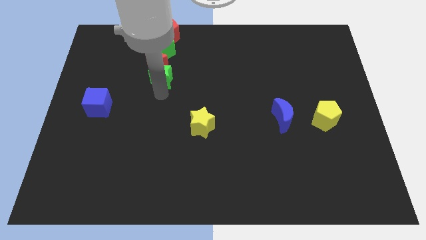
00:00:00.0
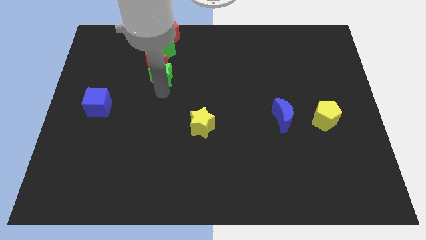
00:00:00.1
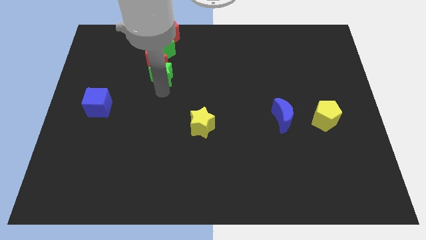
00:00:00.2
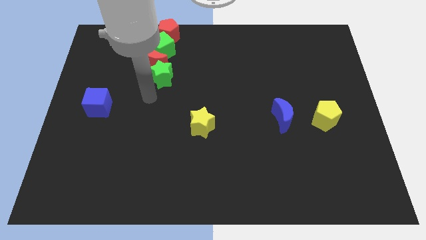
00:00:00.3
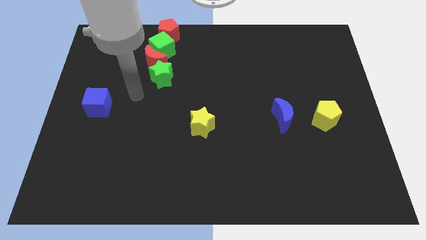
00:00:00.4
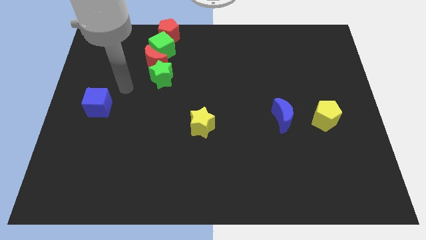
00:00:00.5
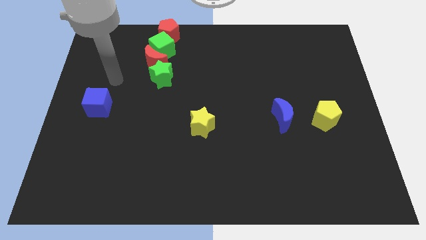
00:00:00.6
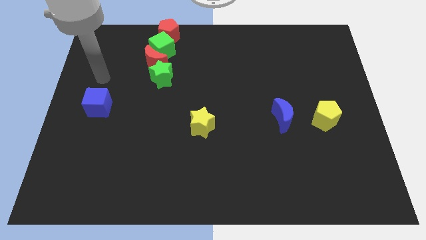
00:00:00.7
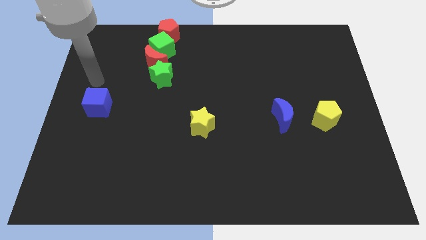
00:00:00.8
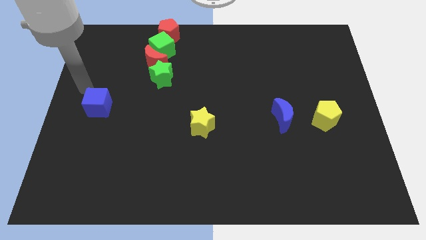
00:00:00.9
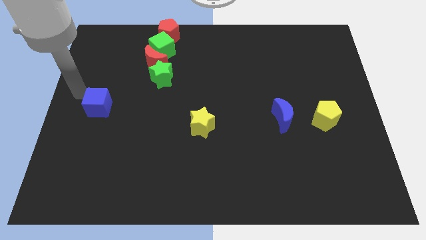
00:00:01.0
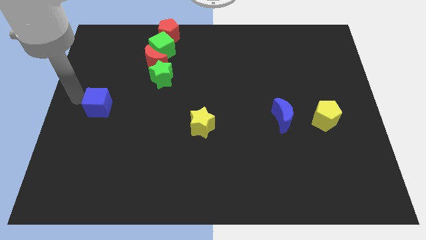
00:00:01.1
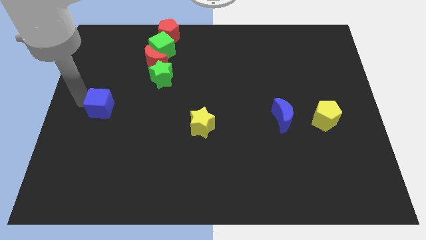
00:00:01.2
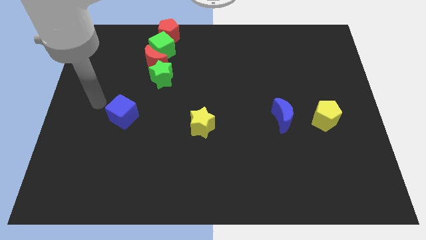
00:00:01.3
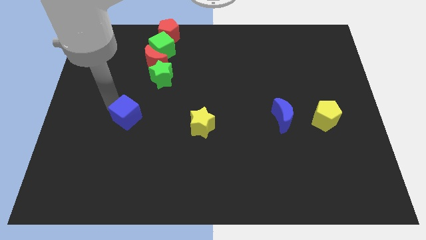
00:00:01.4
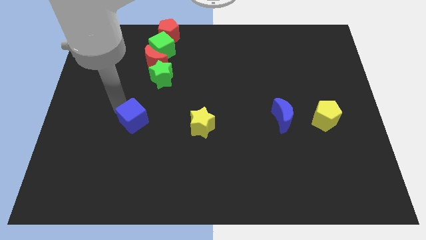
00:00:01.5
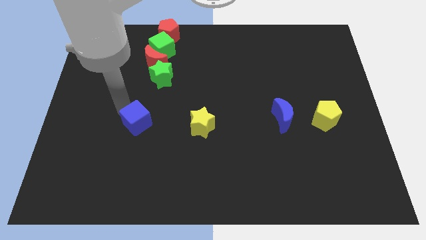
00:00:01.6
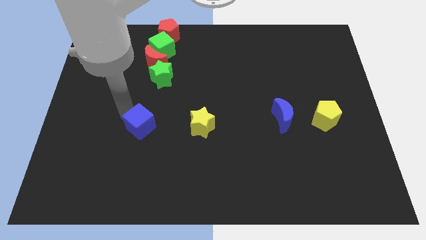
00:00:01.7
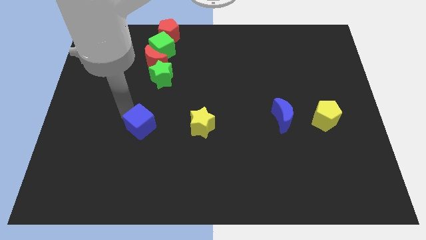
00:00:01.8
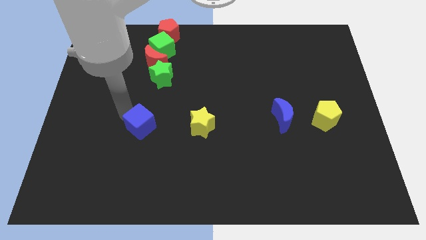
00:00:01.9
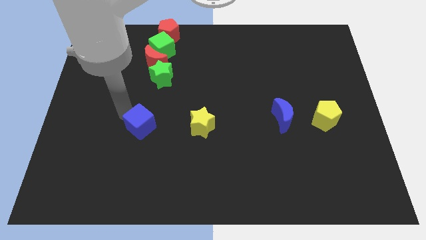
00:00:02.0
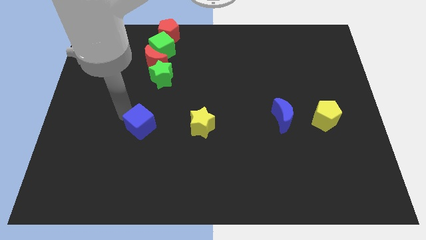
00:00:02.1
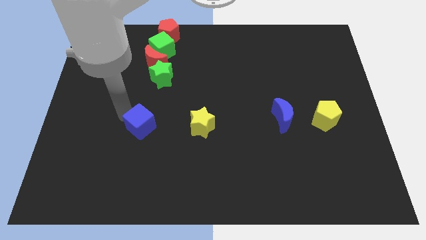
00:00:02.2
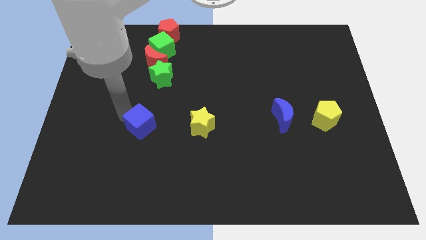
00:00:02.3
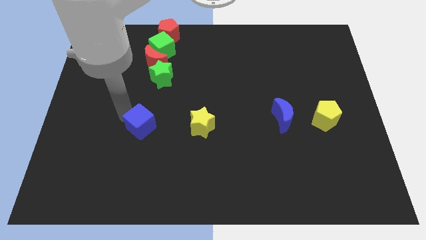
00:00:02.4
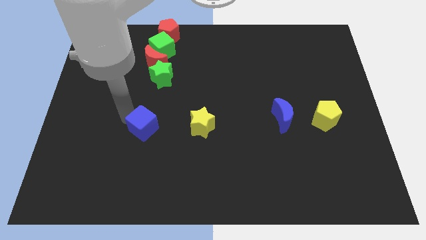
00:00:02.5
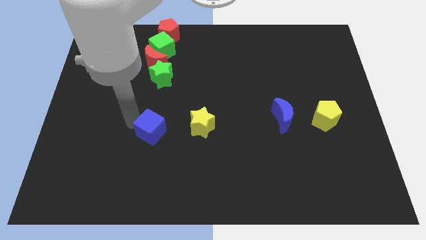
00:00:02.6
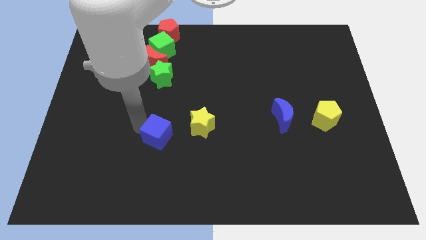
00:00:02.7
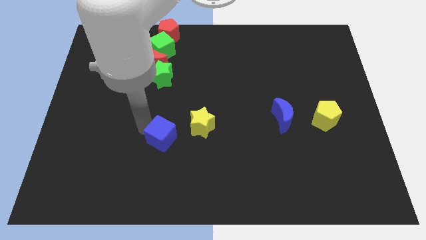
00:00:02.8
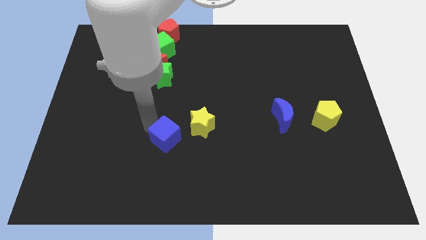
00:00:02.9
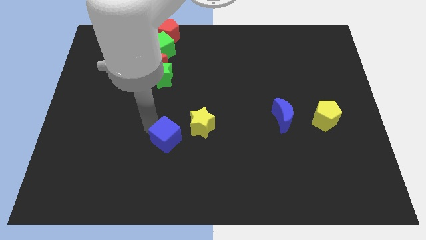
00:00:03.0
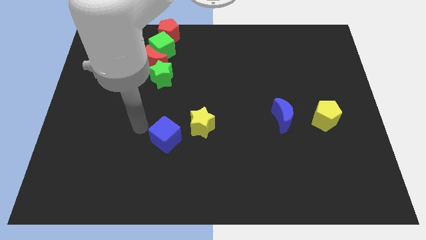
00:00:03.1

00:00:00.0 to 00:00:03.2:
place blue cube vertically below the green star

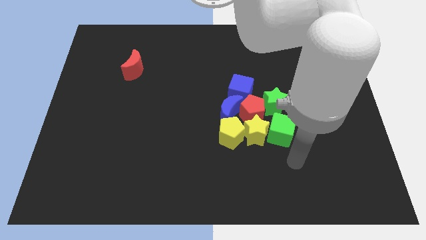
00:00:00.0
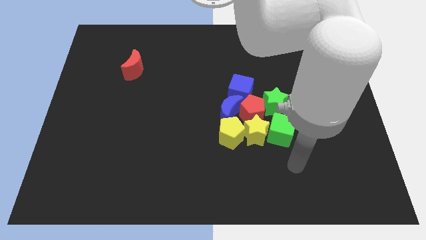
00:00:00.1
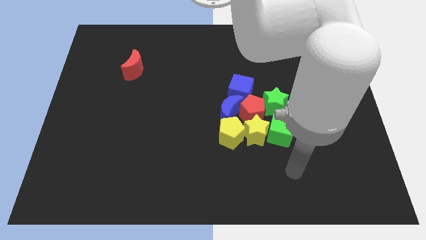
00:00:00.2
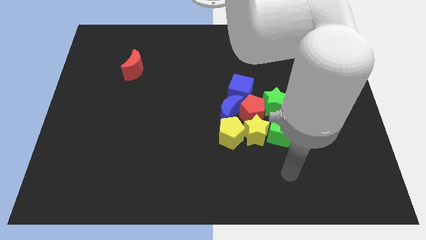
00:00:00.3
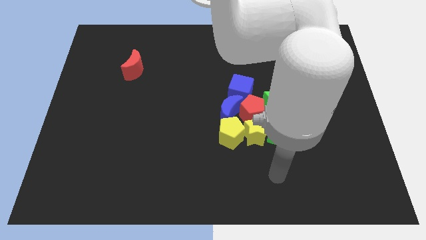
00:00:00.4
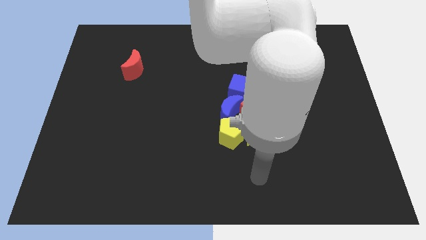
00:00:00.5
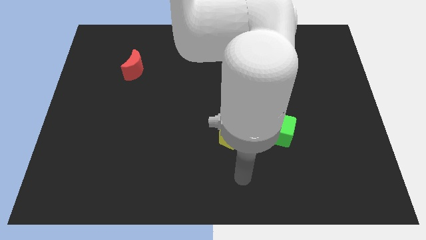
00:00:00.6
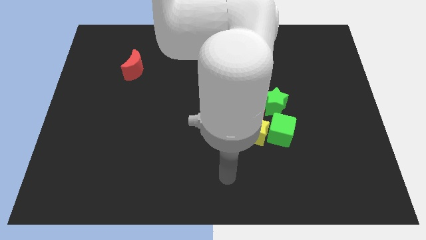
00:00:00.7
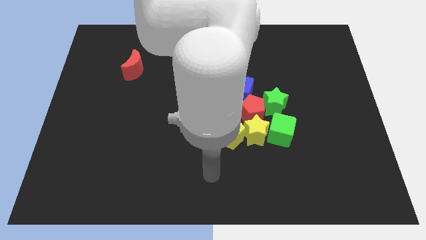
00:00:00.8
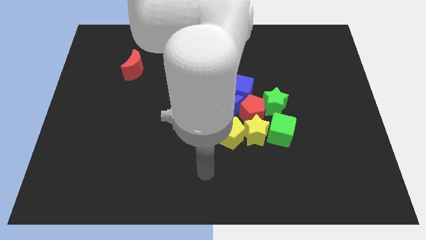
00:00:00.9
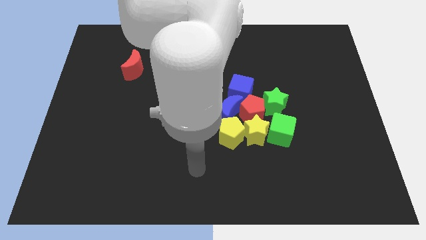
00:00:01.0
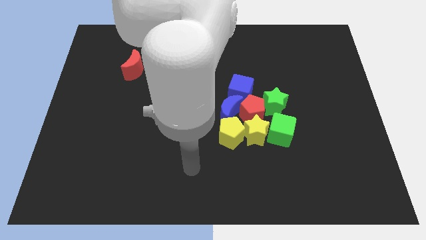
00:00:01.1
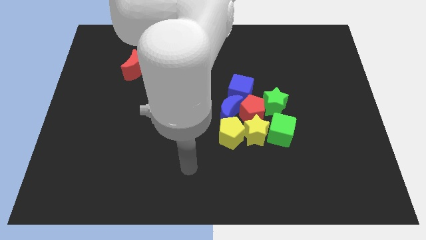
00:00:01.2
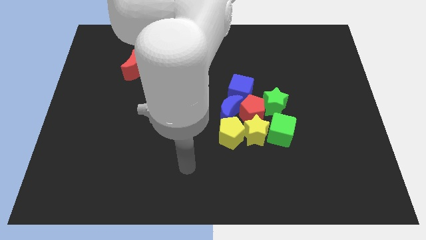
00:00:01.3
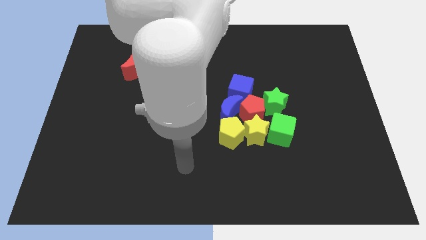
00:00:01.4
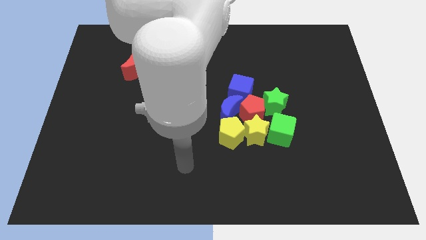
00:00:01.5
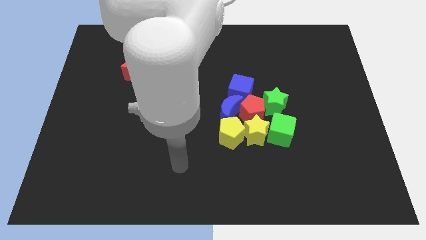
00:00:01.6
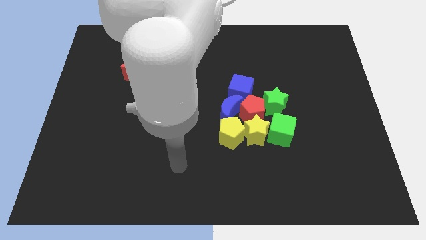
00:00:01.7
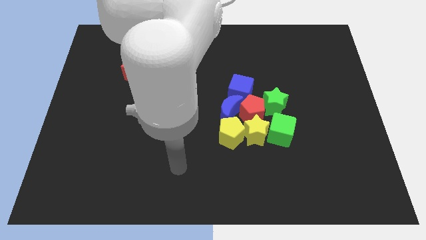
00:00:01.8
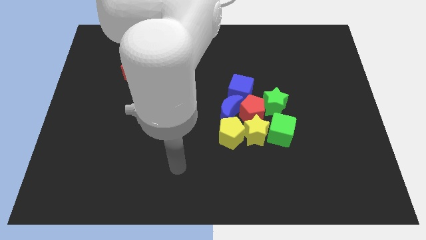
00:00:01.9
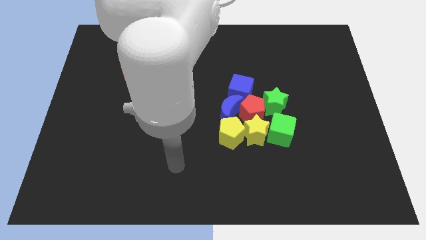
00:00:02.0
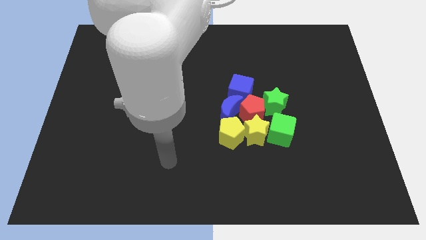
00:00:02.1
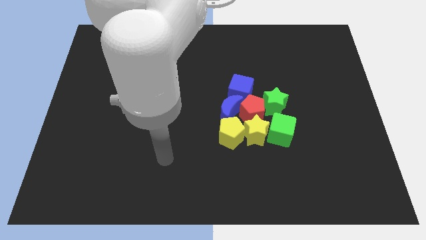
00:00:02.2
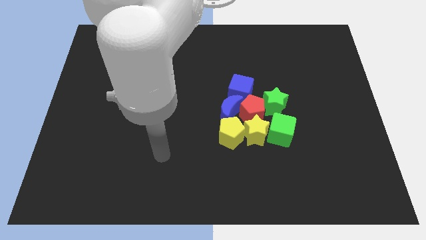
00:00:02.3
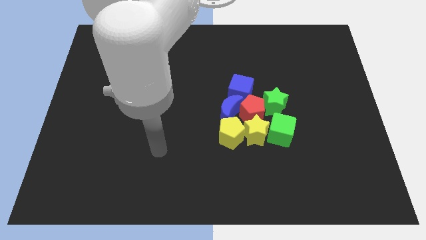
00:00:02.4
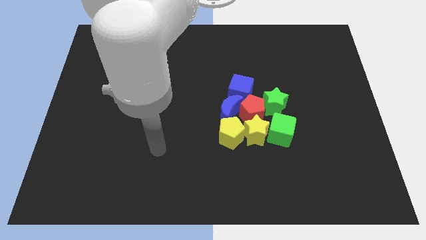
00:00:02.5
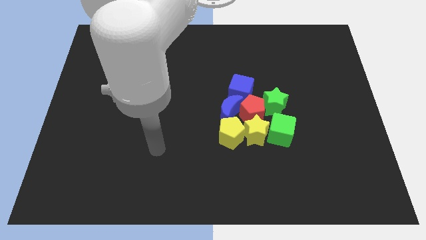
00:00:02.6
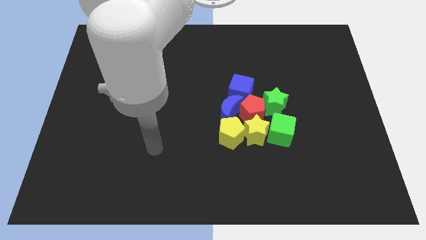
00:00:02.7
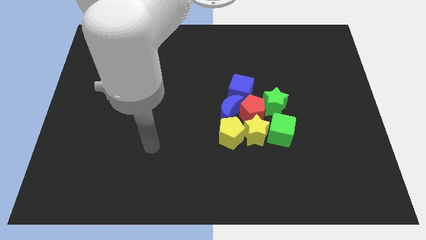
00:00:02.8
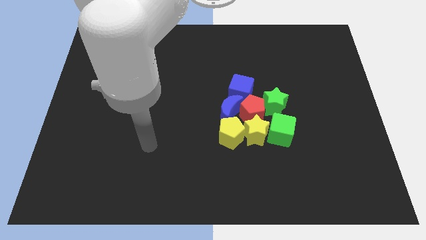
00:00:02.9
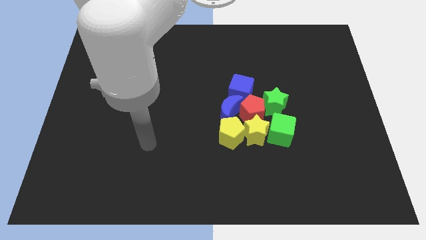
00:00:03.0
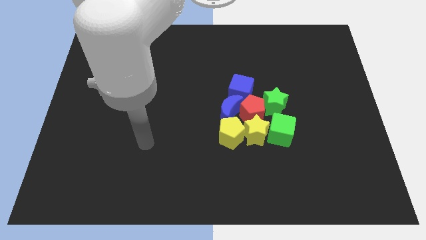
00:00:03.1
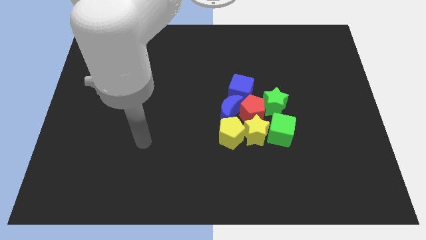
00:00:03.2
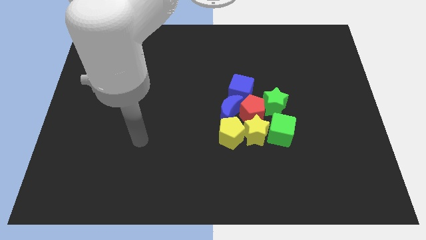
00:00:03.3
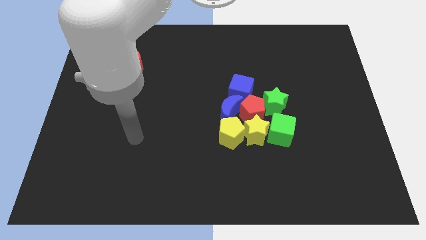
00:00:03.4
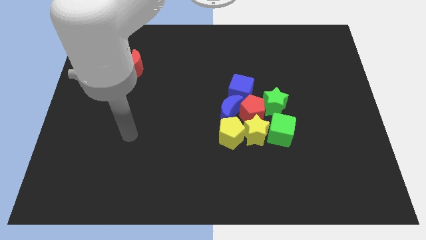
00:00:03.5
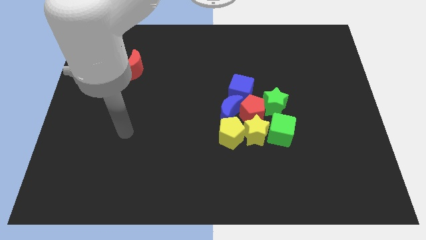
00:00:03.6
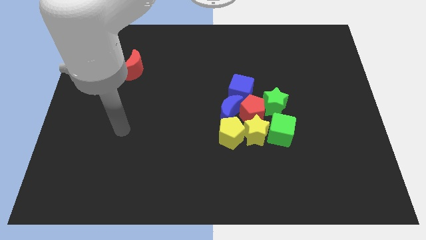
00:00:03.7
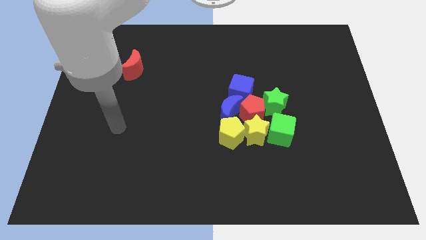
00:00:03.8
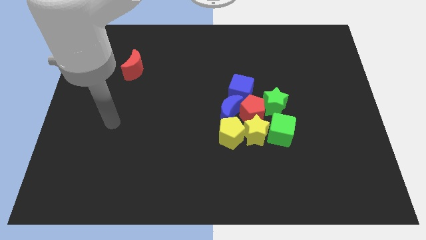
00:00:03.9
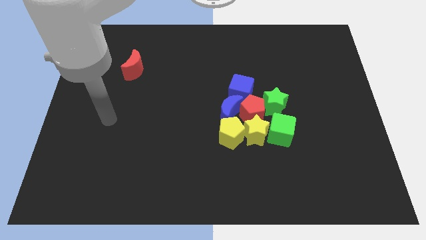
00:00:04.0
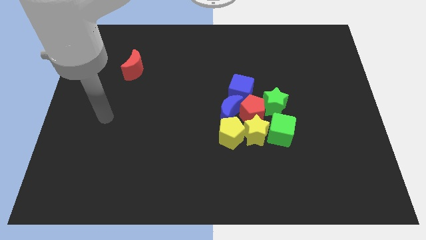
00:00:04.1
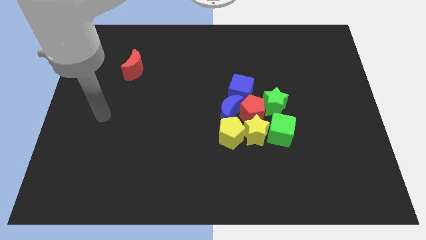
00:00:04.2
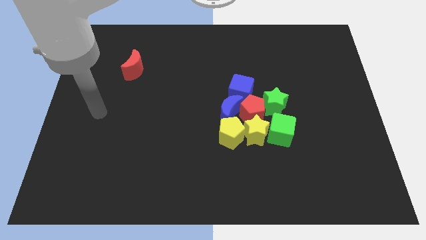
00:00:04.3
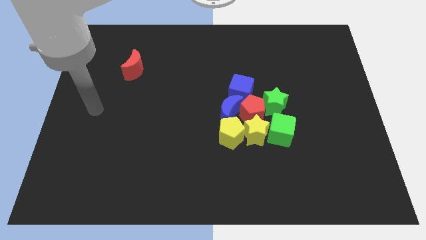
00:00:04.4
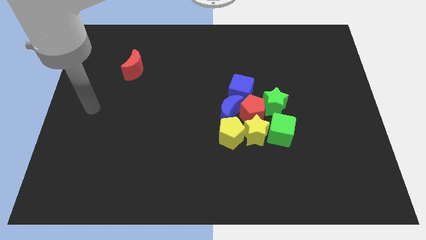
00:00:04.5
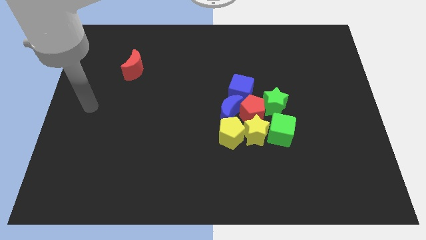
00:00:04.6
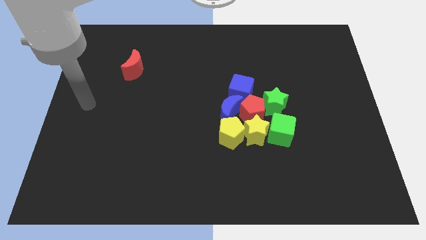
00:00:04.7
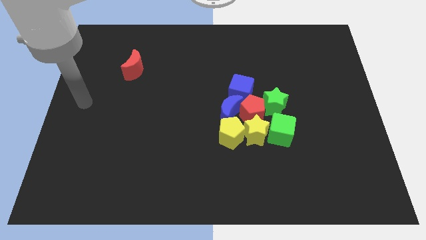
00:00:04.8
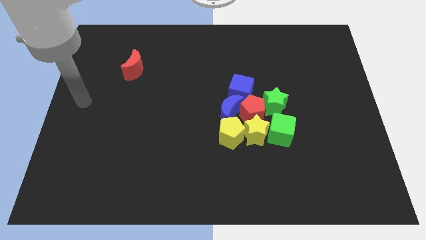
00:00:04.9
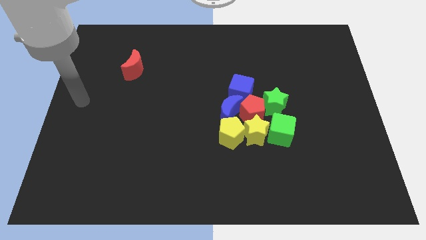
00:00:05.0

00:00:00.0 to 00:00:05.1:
move your arm away from green cube

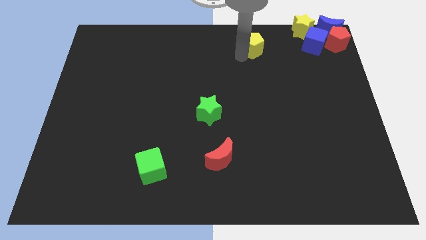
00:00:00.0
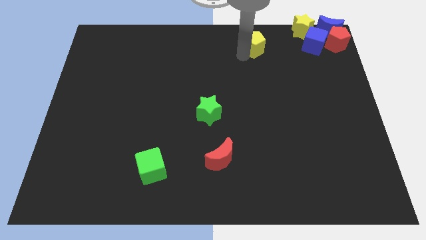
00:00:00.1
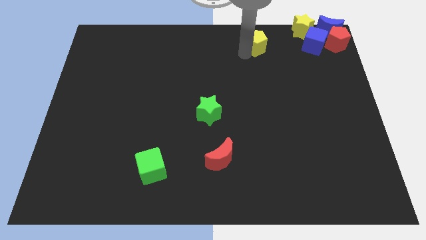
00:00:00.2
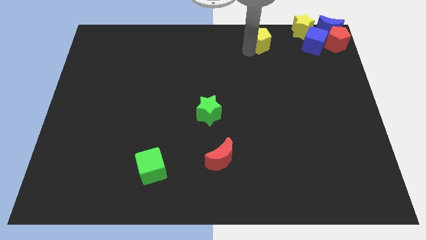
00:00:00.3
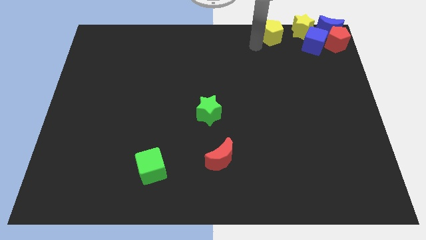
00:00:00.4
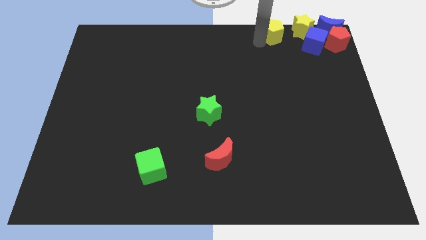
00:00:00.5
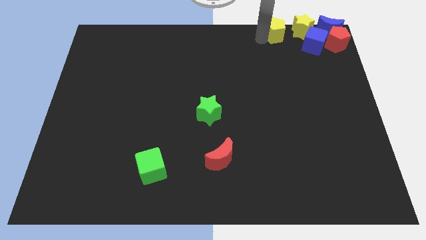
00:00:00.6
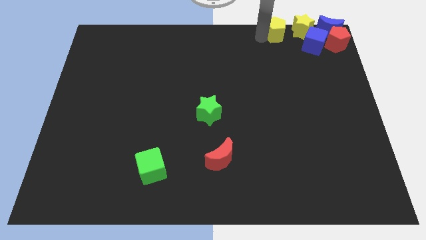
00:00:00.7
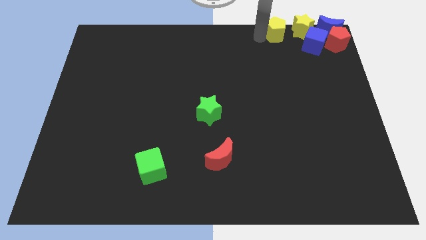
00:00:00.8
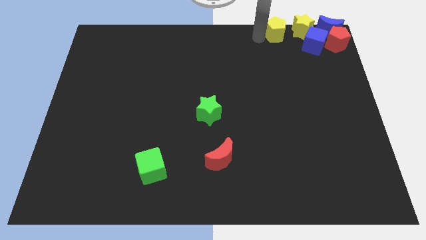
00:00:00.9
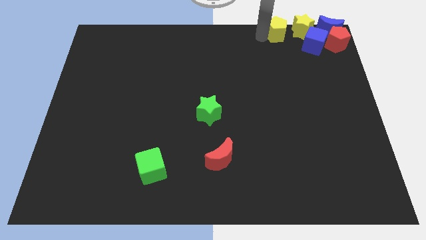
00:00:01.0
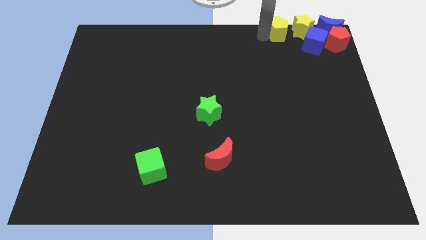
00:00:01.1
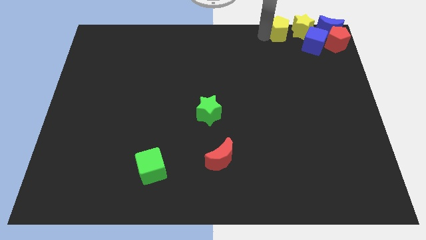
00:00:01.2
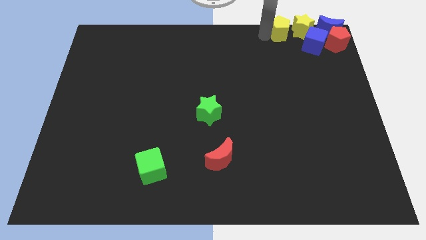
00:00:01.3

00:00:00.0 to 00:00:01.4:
move yellow pentagon left beside the yellow star
